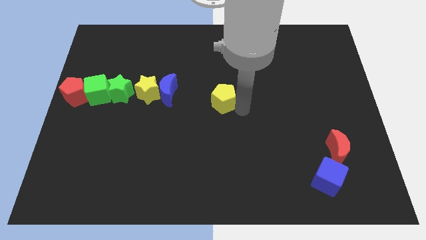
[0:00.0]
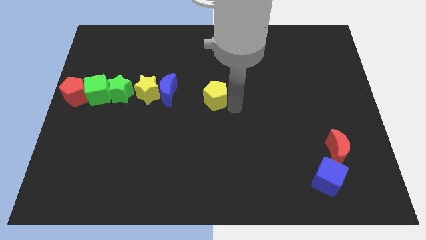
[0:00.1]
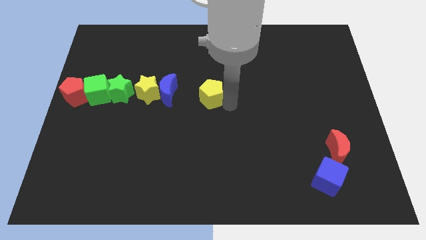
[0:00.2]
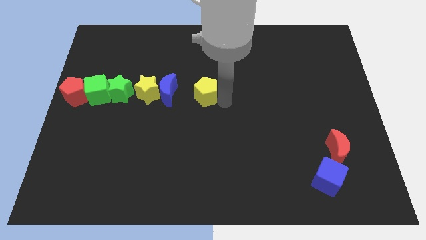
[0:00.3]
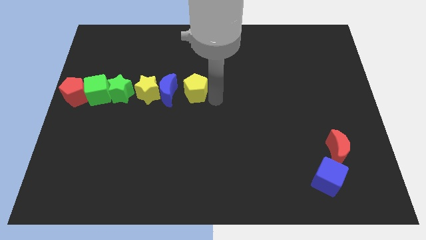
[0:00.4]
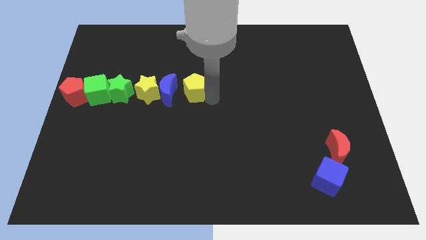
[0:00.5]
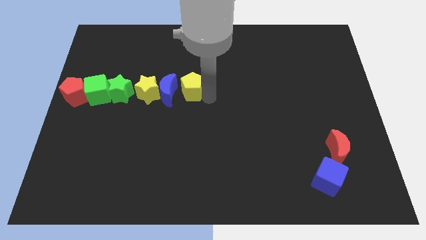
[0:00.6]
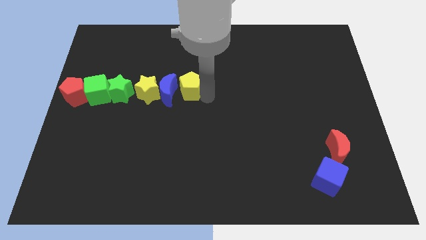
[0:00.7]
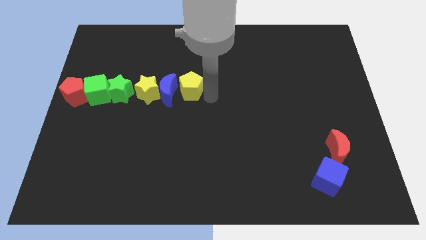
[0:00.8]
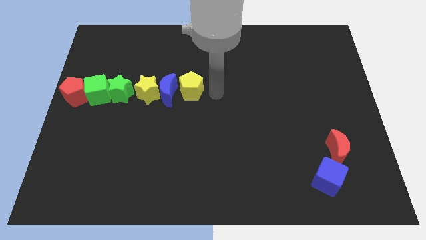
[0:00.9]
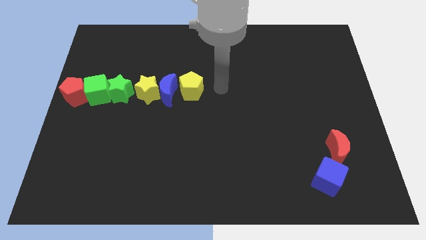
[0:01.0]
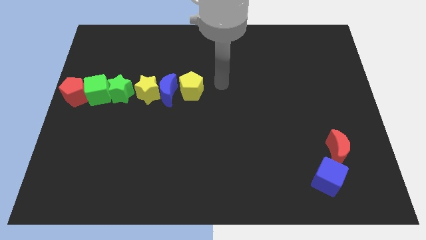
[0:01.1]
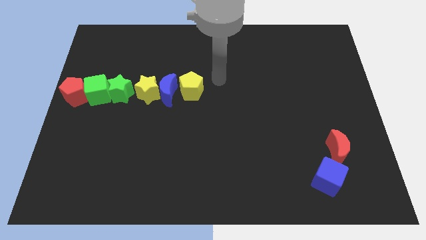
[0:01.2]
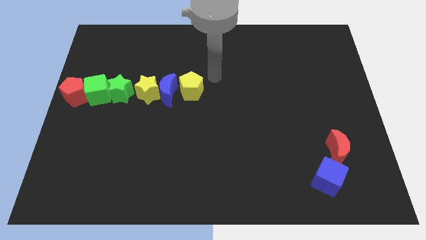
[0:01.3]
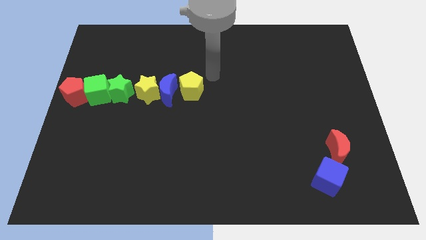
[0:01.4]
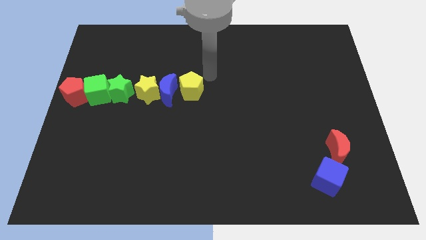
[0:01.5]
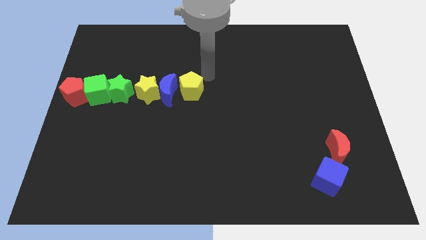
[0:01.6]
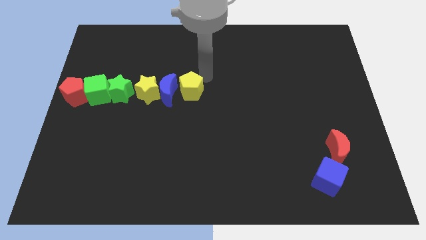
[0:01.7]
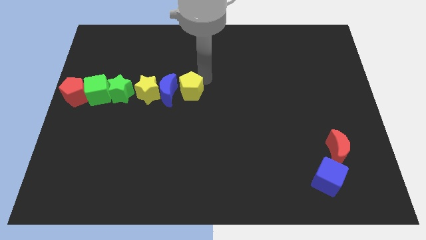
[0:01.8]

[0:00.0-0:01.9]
place the yellow pentagon close to the blue moon

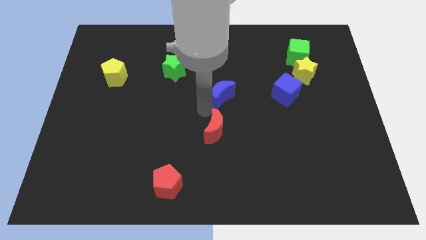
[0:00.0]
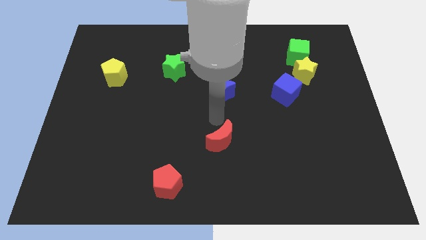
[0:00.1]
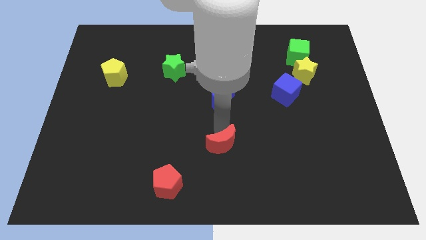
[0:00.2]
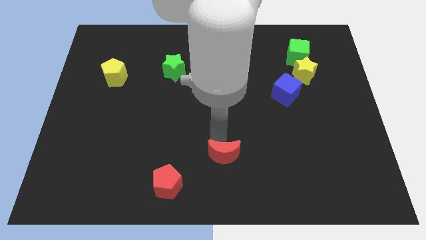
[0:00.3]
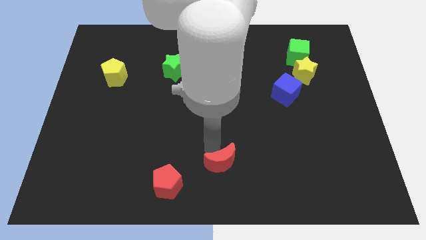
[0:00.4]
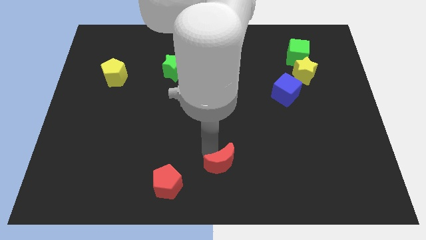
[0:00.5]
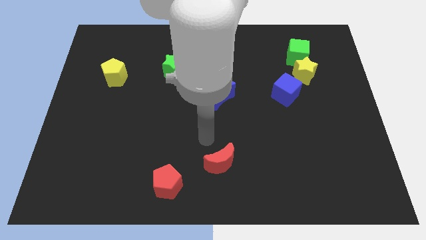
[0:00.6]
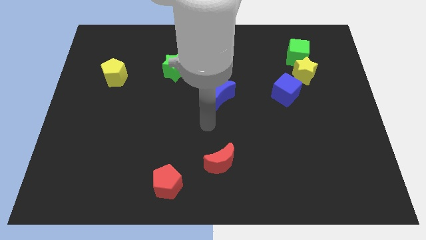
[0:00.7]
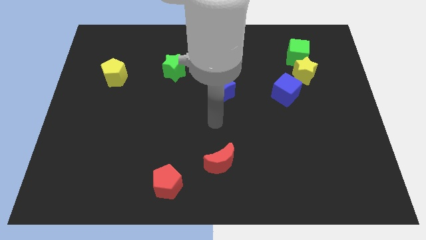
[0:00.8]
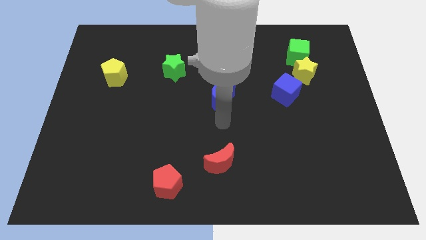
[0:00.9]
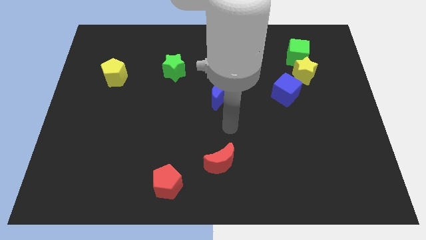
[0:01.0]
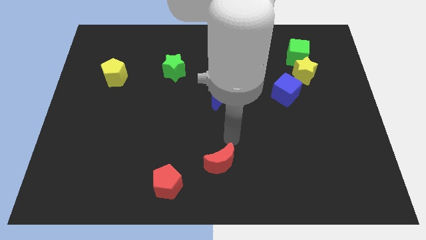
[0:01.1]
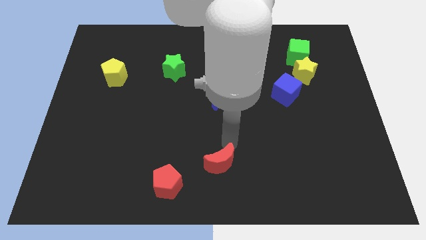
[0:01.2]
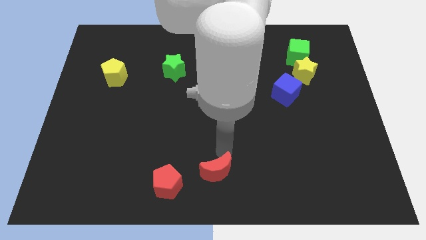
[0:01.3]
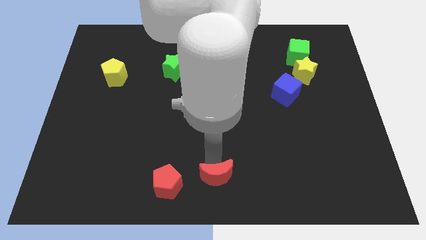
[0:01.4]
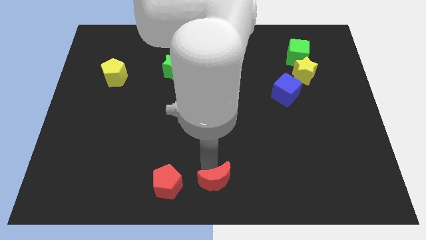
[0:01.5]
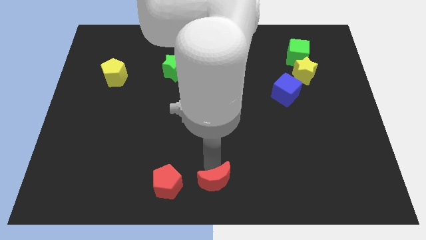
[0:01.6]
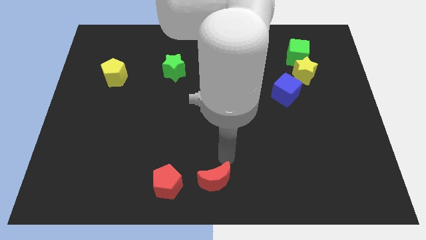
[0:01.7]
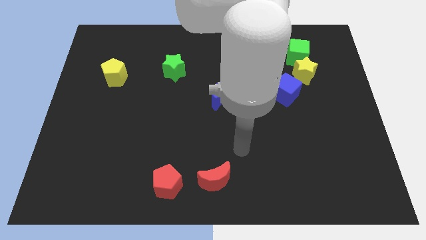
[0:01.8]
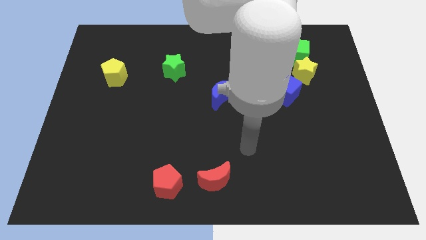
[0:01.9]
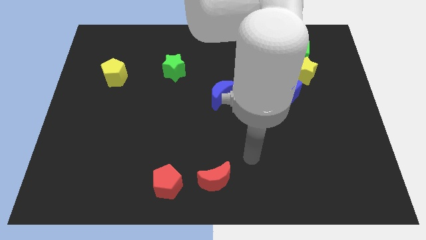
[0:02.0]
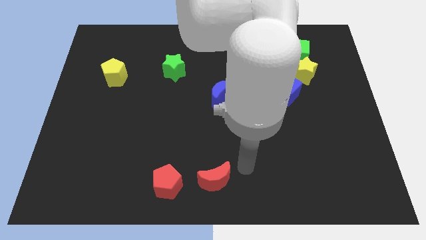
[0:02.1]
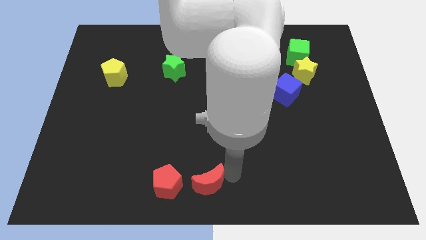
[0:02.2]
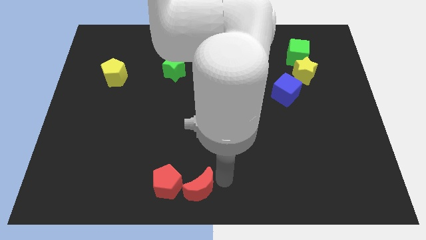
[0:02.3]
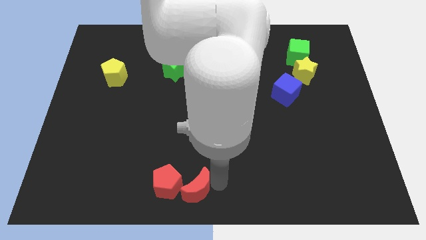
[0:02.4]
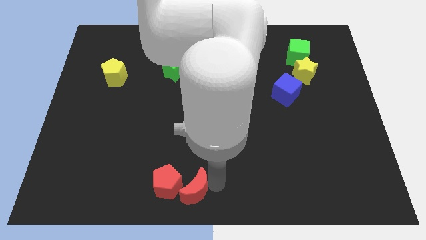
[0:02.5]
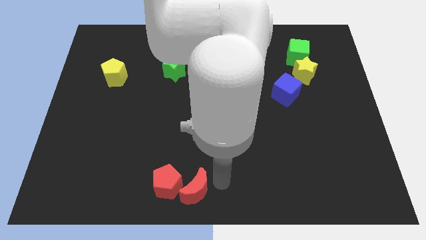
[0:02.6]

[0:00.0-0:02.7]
move the red crescent right to the red pentagon

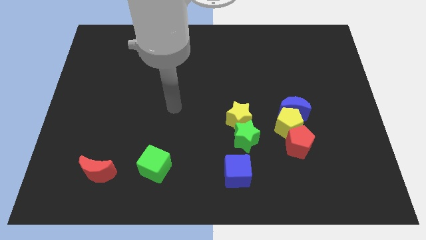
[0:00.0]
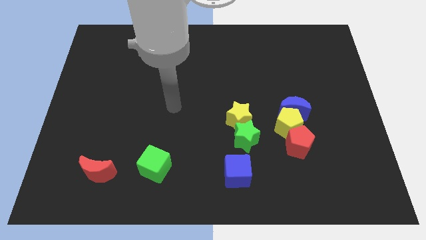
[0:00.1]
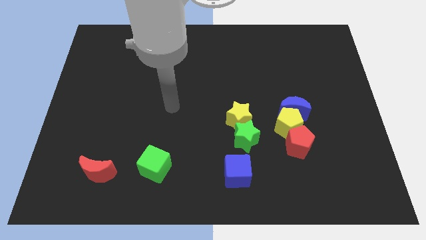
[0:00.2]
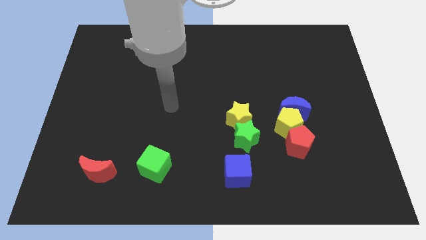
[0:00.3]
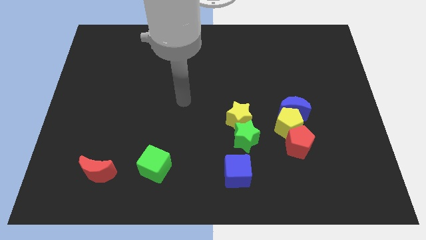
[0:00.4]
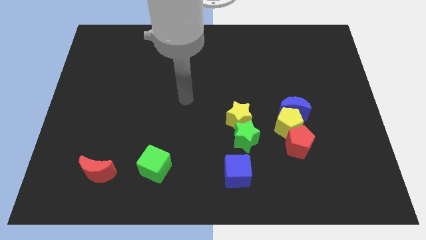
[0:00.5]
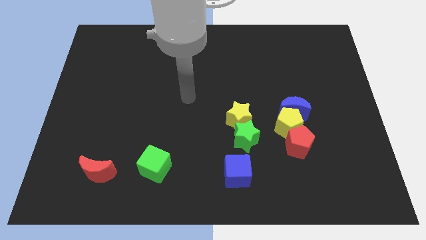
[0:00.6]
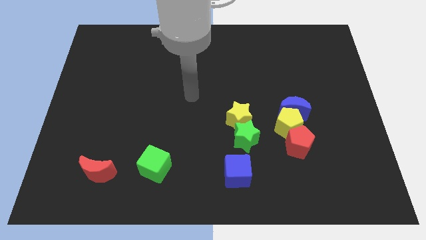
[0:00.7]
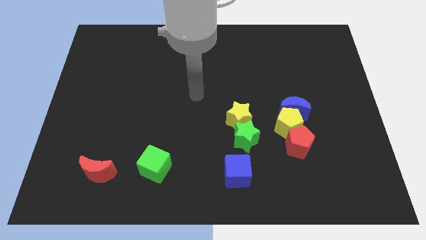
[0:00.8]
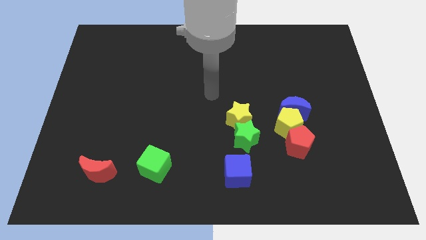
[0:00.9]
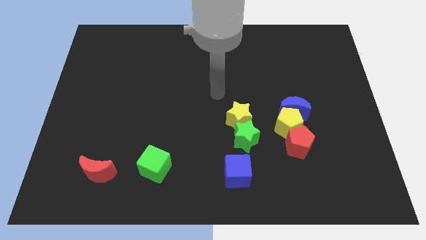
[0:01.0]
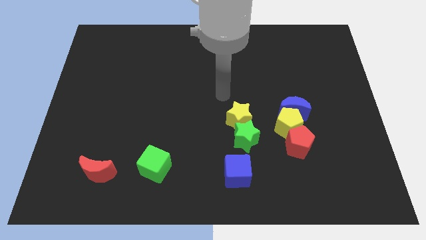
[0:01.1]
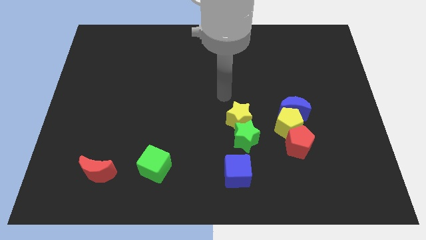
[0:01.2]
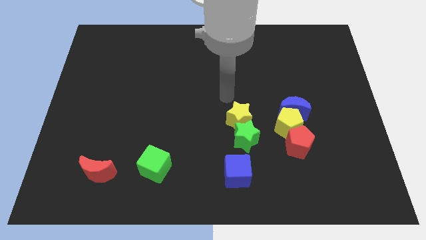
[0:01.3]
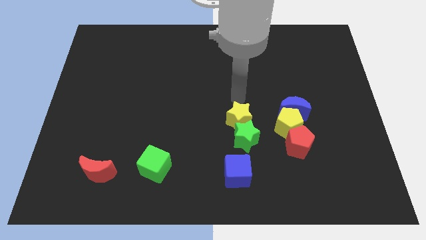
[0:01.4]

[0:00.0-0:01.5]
move your arm to the top side of the yellow star

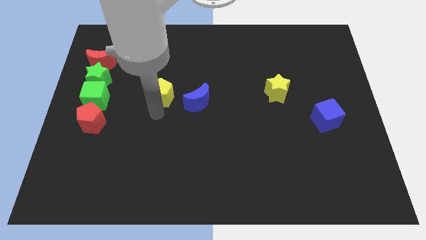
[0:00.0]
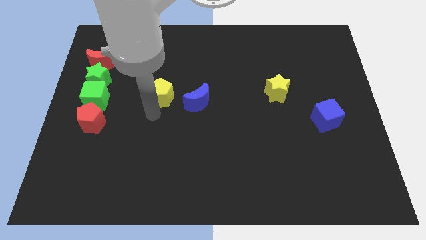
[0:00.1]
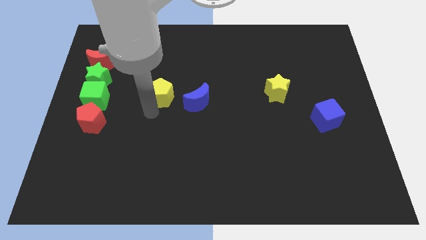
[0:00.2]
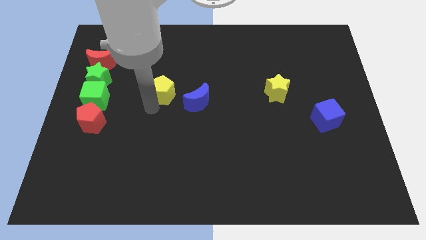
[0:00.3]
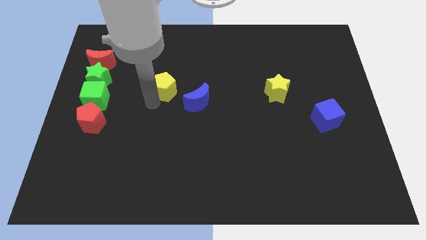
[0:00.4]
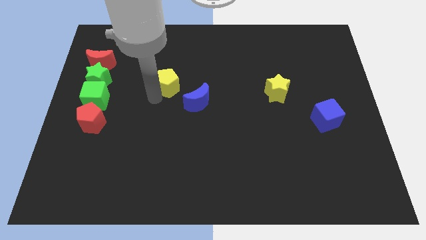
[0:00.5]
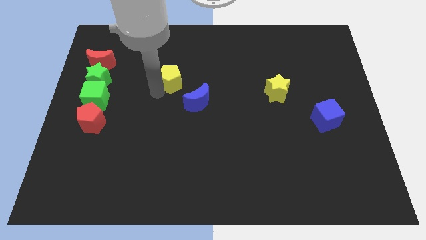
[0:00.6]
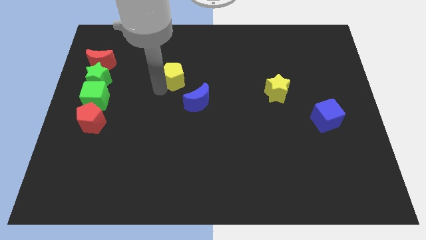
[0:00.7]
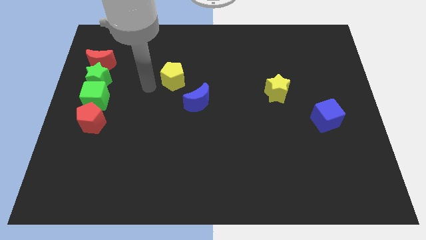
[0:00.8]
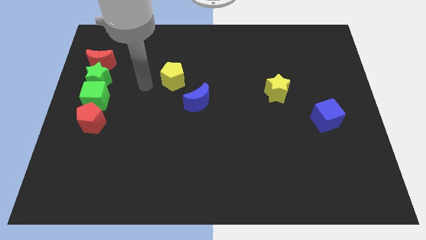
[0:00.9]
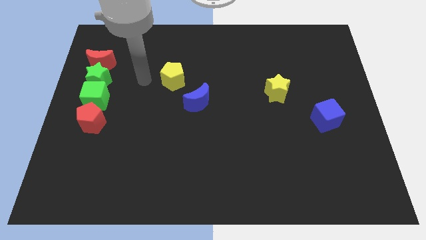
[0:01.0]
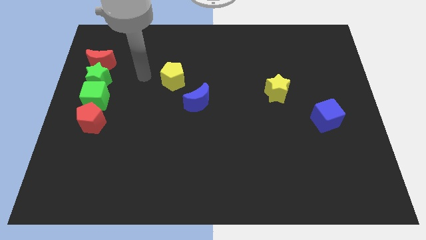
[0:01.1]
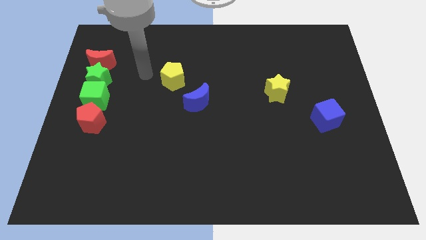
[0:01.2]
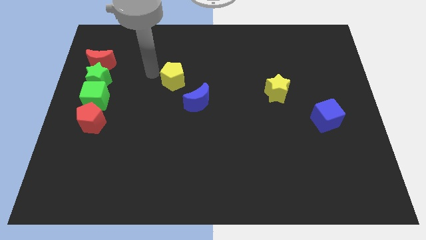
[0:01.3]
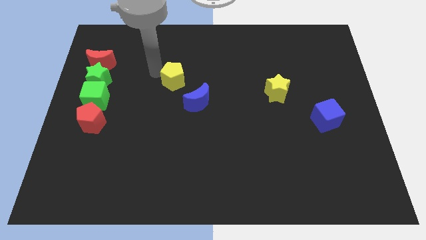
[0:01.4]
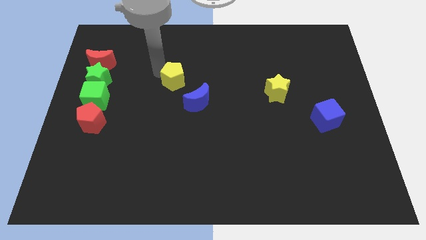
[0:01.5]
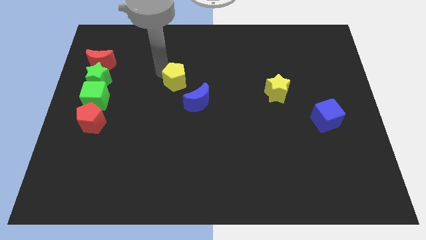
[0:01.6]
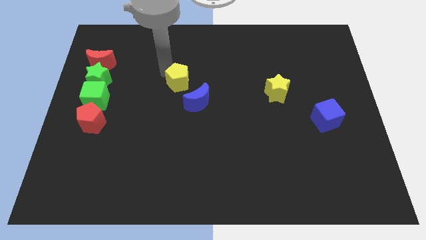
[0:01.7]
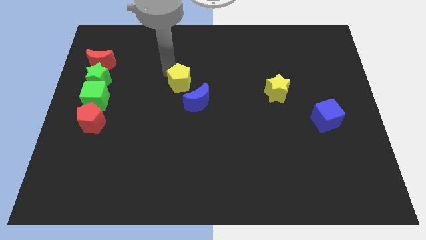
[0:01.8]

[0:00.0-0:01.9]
push the yellow pentagon above the blue crescent

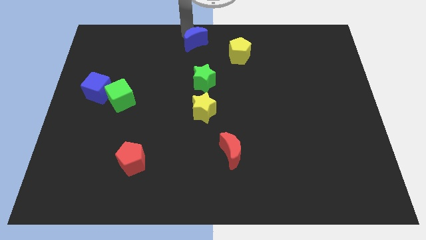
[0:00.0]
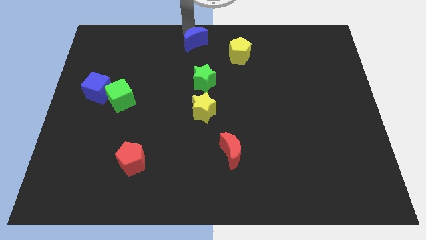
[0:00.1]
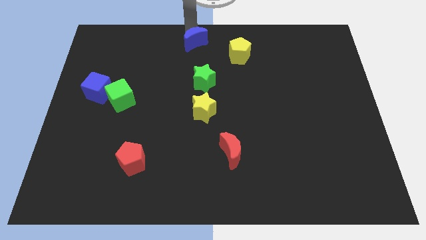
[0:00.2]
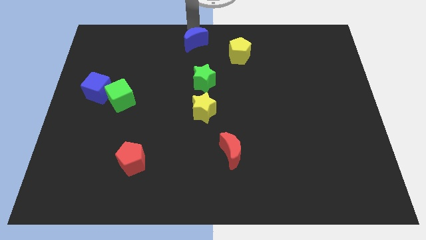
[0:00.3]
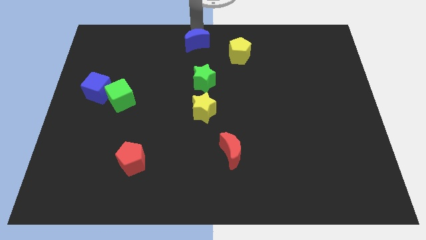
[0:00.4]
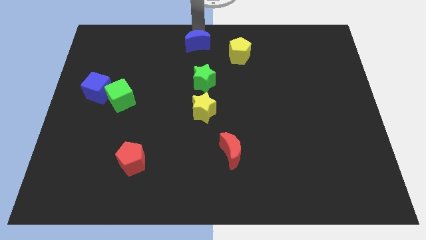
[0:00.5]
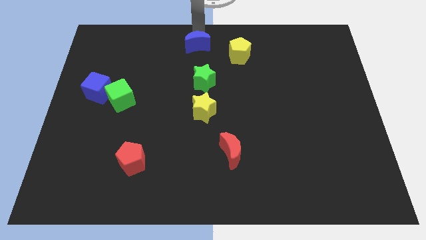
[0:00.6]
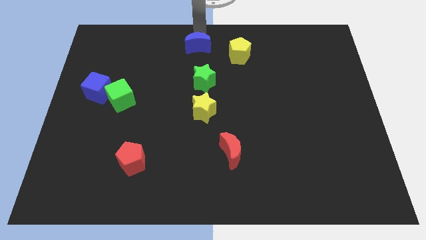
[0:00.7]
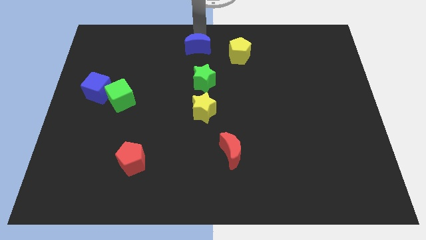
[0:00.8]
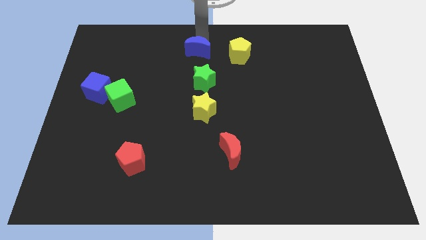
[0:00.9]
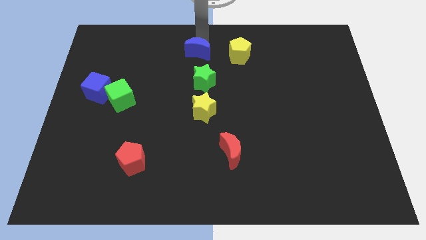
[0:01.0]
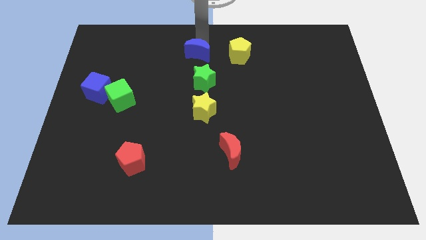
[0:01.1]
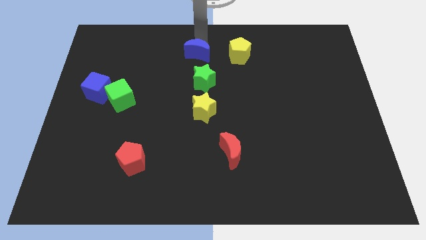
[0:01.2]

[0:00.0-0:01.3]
place blue moon to the left of yellow pentagon
